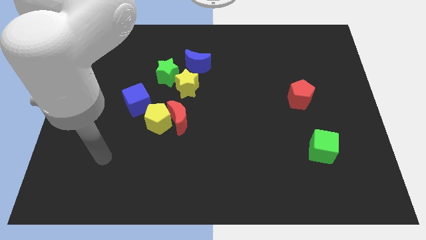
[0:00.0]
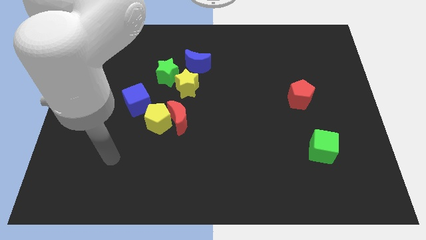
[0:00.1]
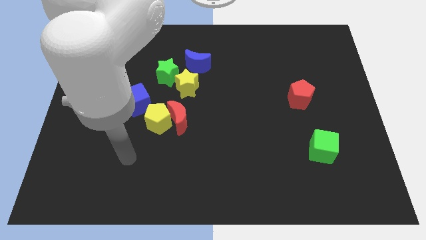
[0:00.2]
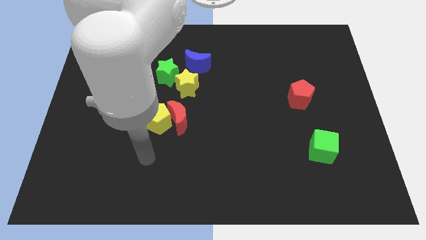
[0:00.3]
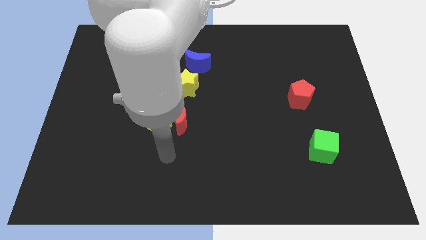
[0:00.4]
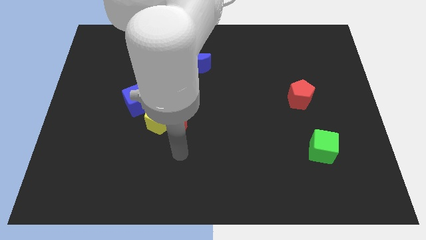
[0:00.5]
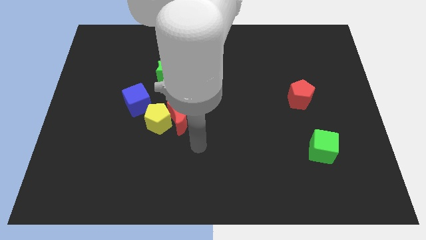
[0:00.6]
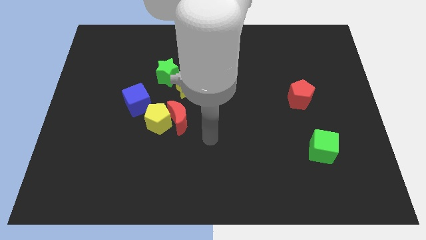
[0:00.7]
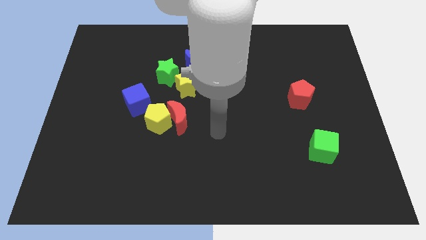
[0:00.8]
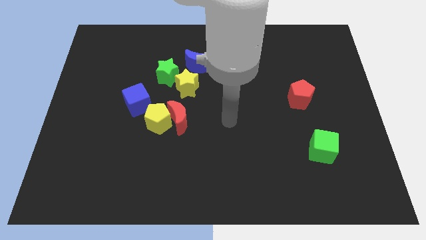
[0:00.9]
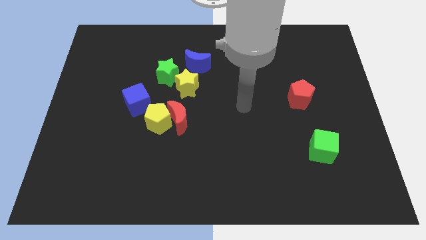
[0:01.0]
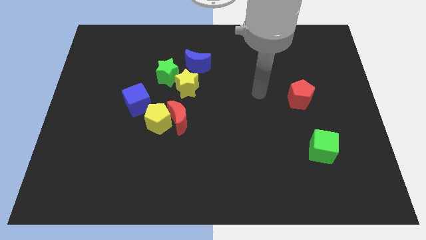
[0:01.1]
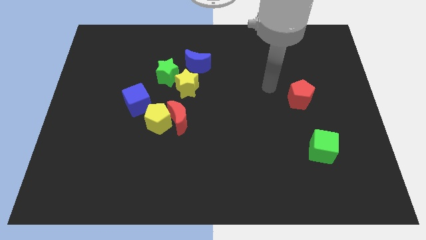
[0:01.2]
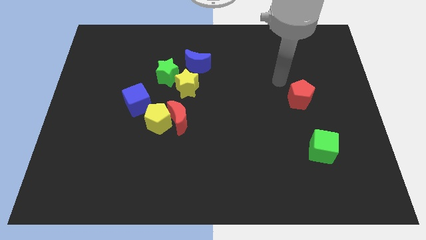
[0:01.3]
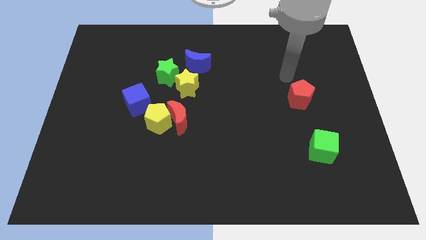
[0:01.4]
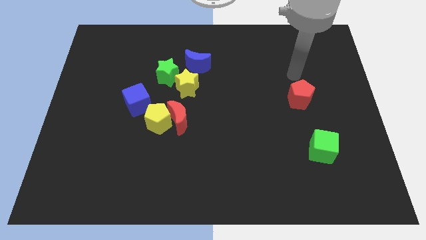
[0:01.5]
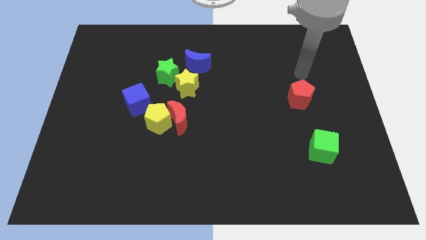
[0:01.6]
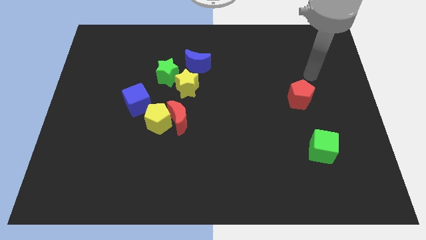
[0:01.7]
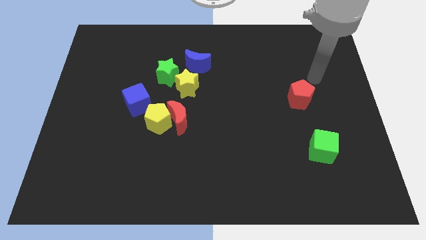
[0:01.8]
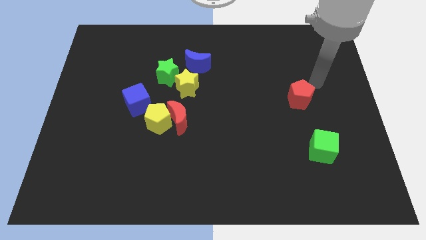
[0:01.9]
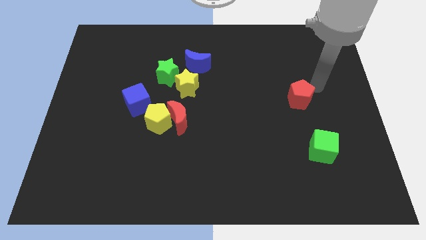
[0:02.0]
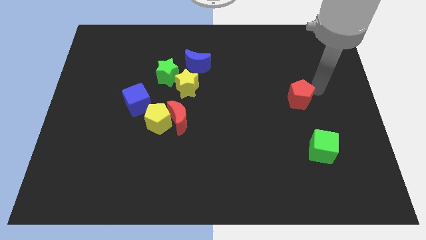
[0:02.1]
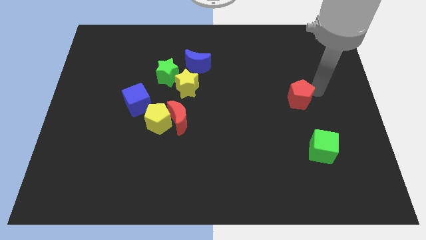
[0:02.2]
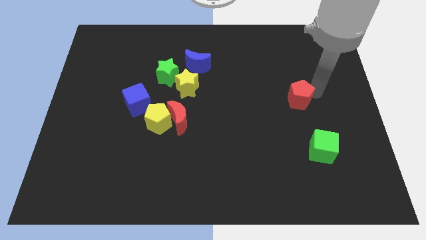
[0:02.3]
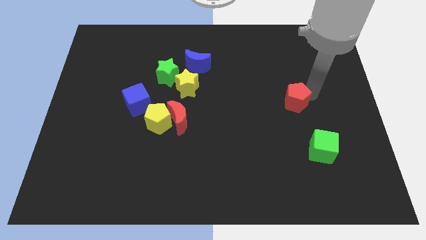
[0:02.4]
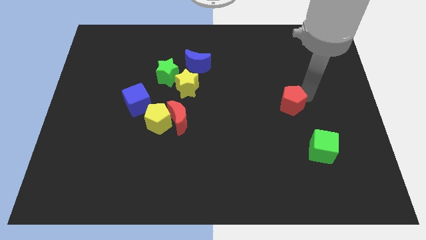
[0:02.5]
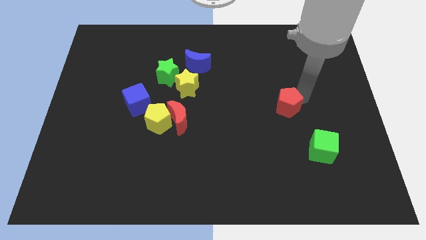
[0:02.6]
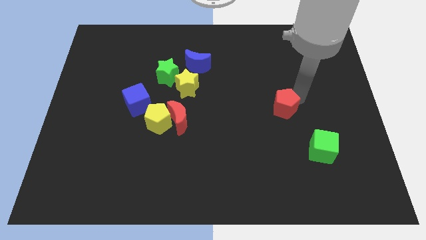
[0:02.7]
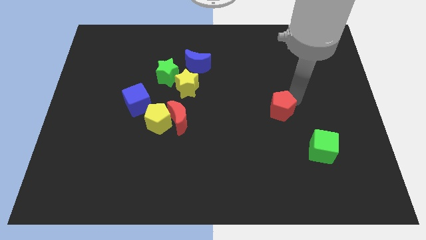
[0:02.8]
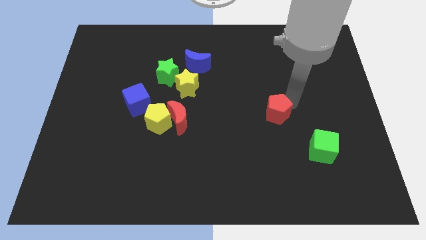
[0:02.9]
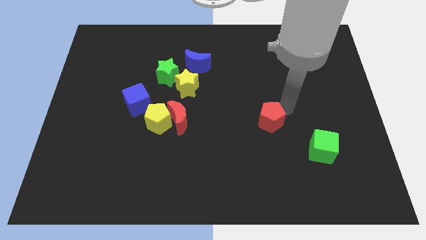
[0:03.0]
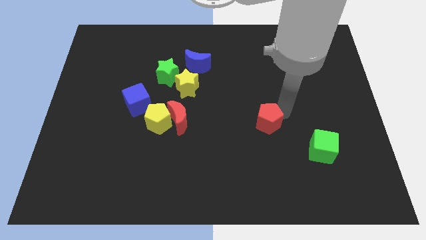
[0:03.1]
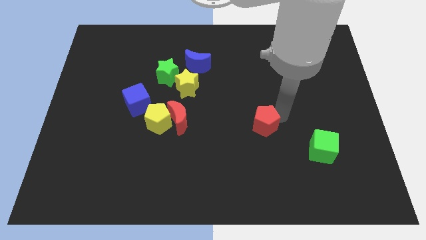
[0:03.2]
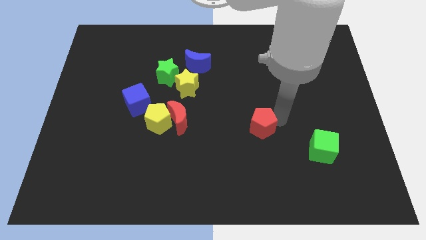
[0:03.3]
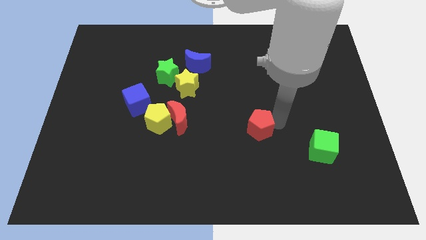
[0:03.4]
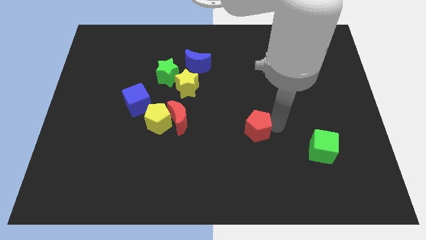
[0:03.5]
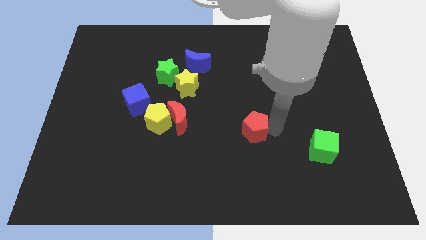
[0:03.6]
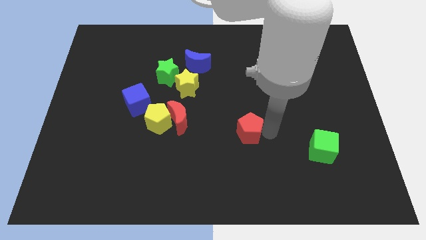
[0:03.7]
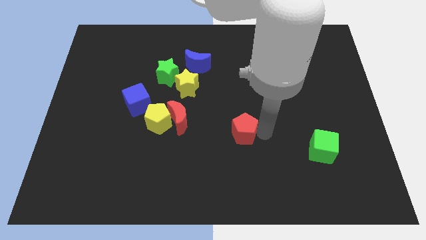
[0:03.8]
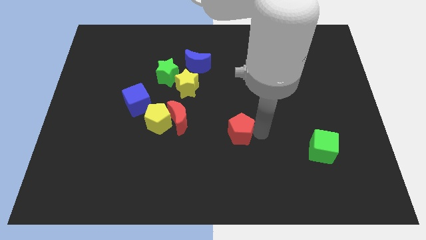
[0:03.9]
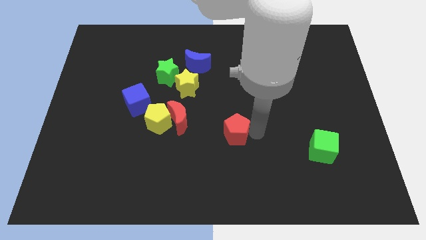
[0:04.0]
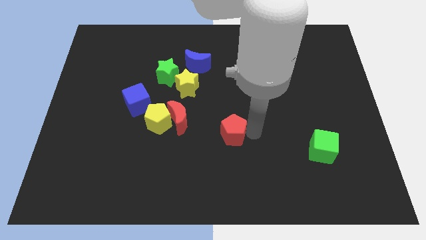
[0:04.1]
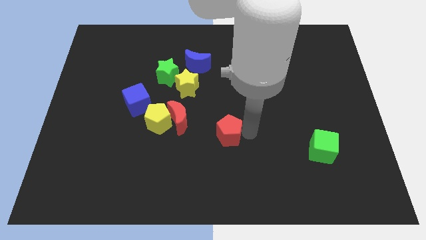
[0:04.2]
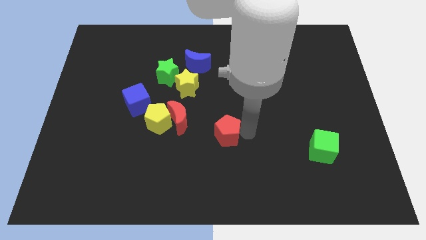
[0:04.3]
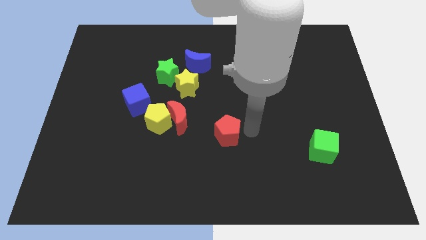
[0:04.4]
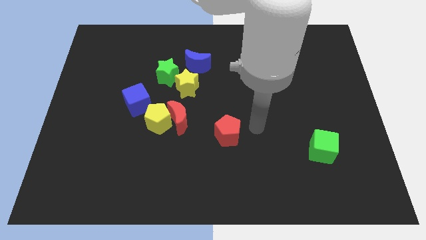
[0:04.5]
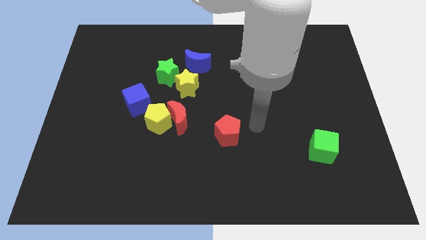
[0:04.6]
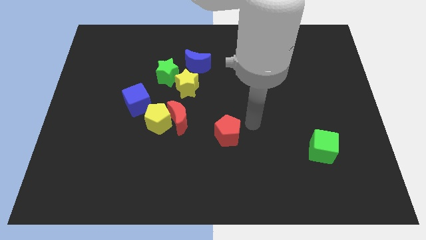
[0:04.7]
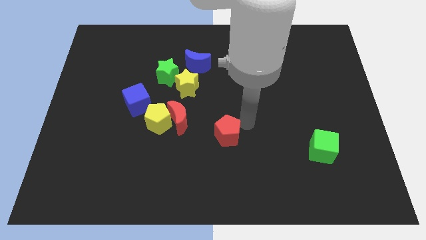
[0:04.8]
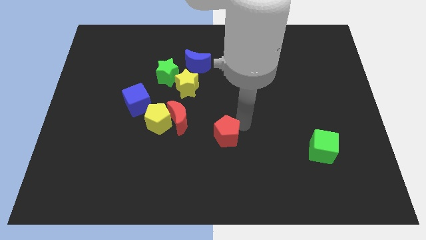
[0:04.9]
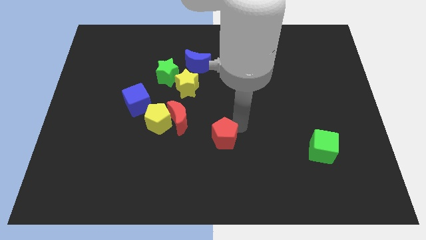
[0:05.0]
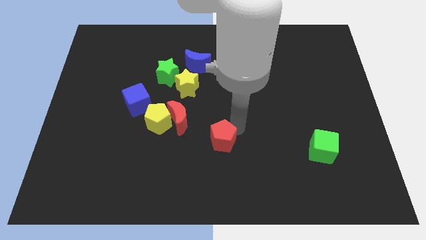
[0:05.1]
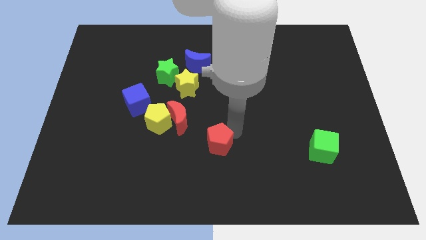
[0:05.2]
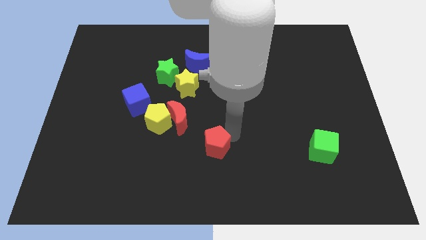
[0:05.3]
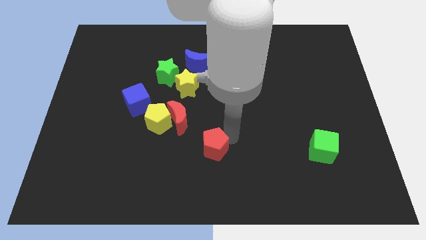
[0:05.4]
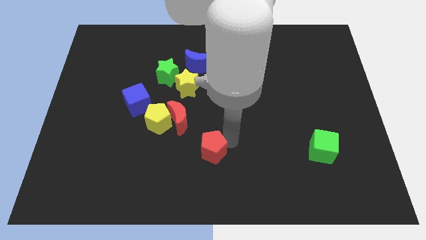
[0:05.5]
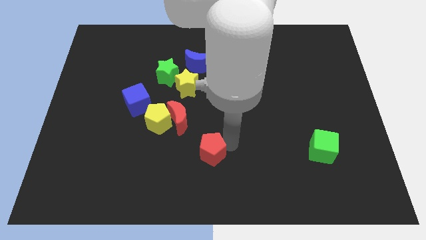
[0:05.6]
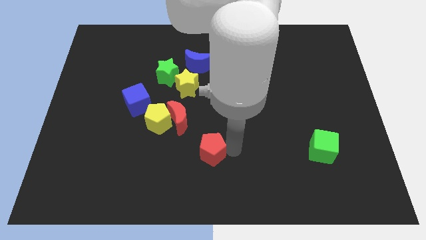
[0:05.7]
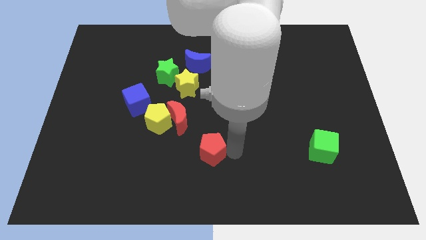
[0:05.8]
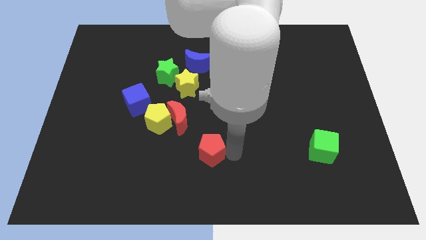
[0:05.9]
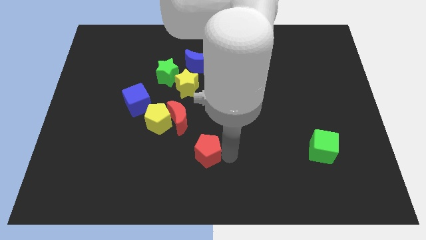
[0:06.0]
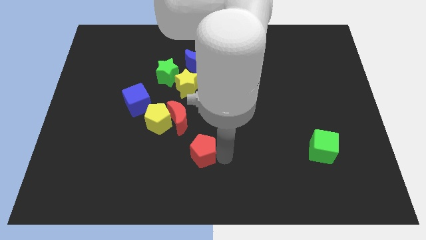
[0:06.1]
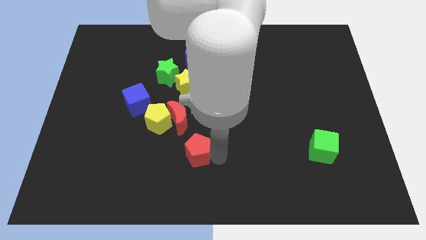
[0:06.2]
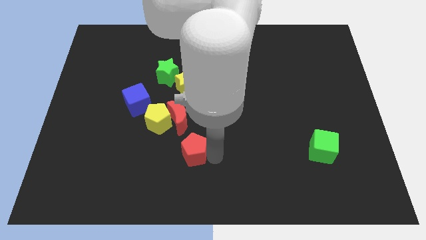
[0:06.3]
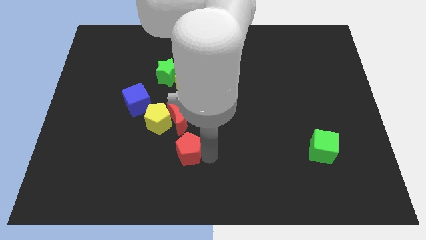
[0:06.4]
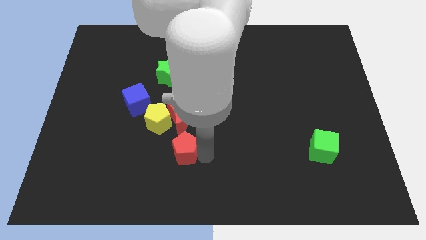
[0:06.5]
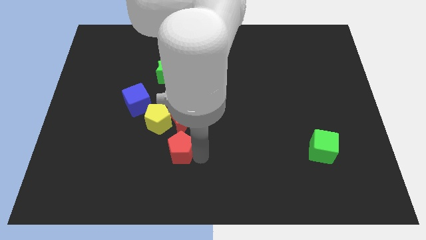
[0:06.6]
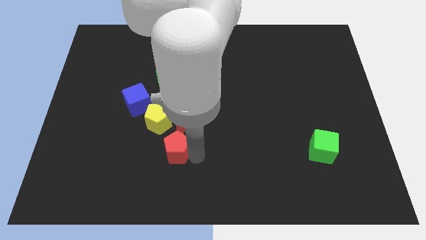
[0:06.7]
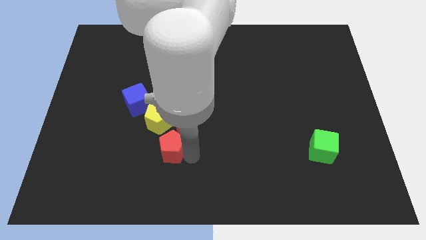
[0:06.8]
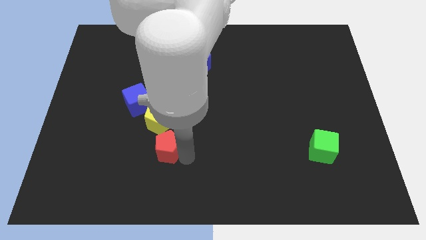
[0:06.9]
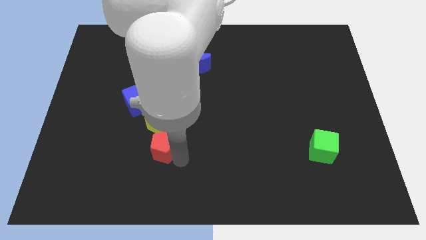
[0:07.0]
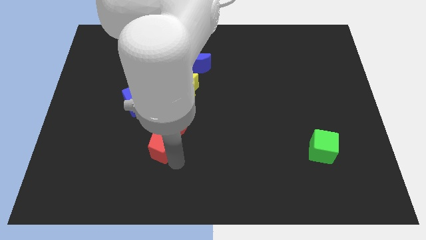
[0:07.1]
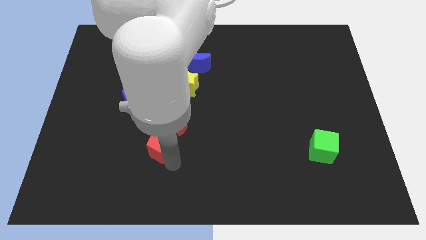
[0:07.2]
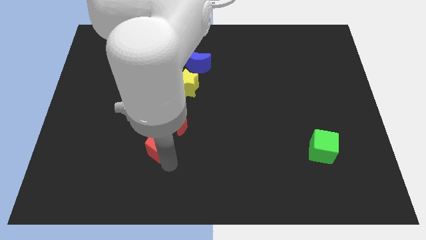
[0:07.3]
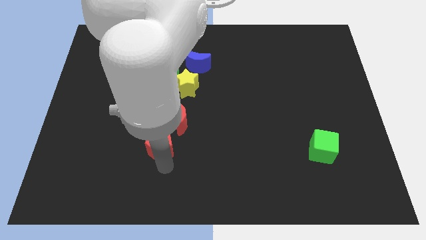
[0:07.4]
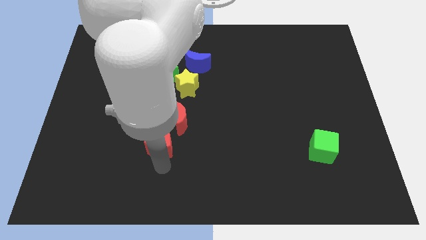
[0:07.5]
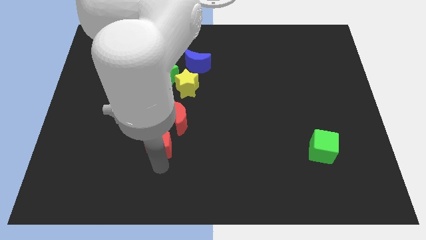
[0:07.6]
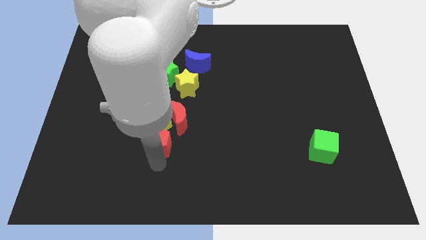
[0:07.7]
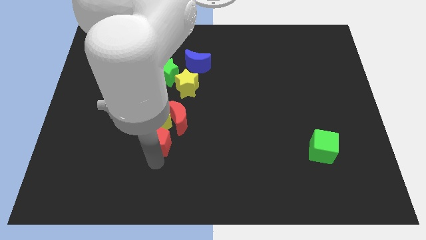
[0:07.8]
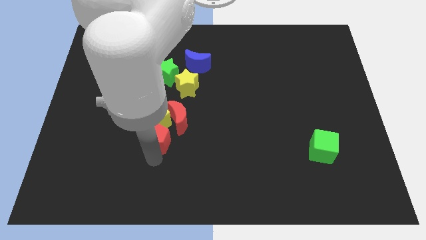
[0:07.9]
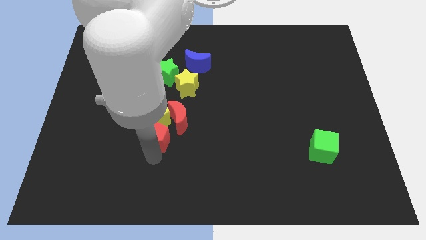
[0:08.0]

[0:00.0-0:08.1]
slide the red pentagon towards the yellow pentagon

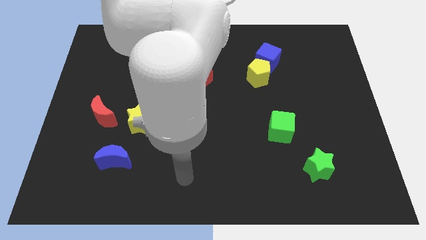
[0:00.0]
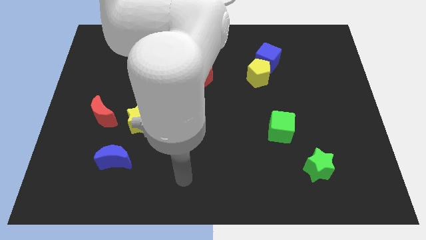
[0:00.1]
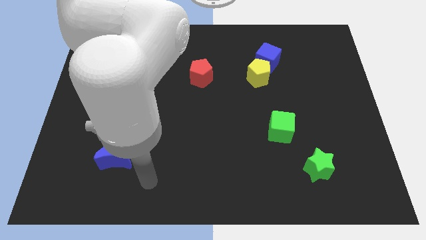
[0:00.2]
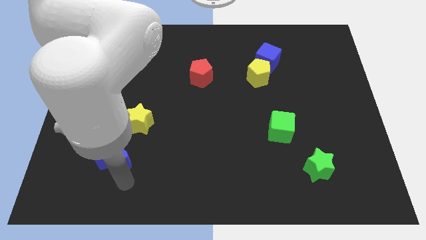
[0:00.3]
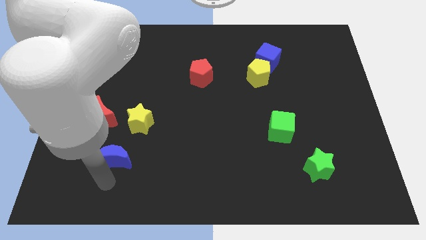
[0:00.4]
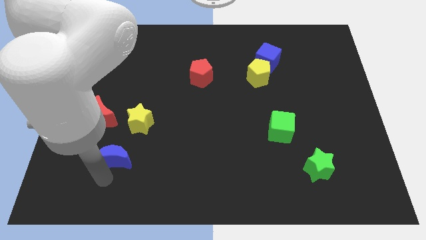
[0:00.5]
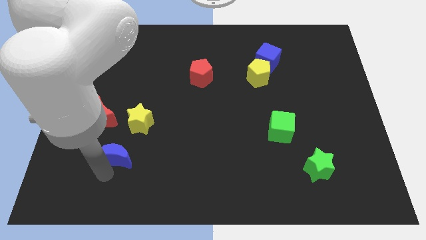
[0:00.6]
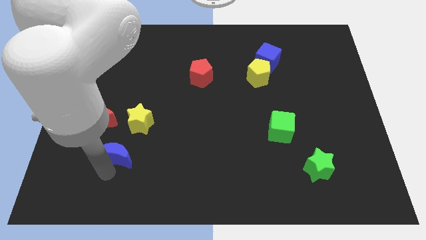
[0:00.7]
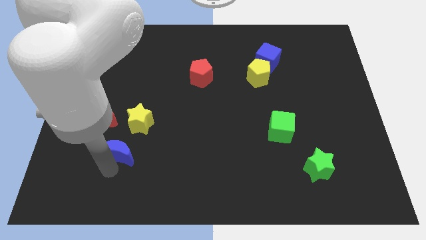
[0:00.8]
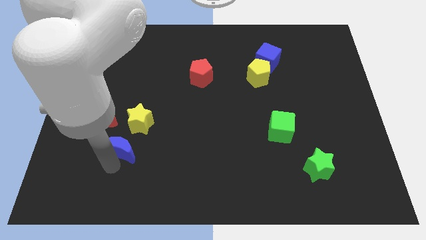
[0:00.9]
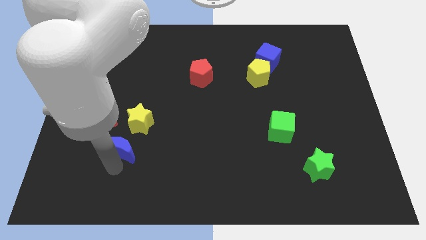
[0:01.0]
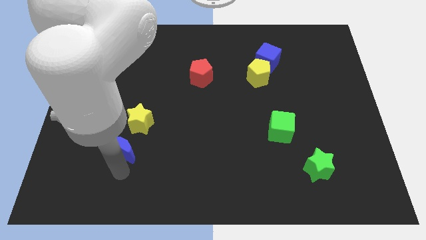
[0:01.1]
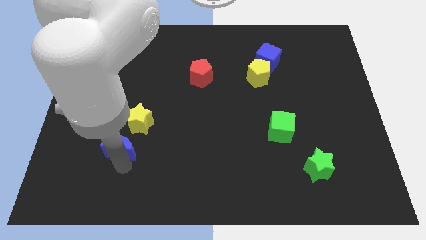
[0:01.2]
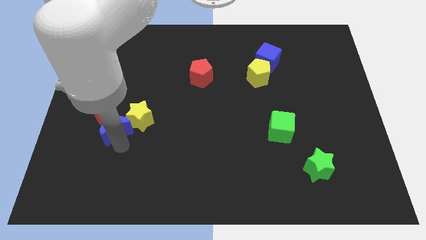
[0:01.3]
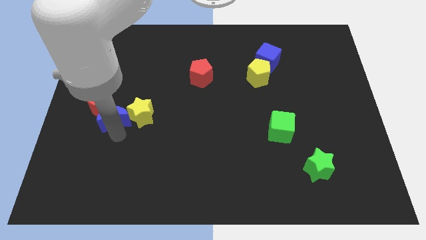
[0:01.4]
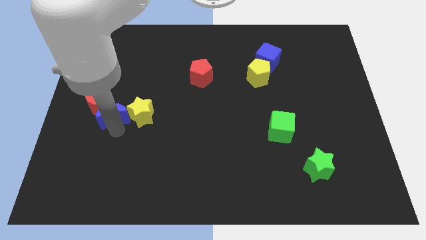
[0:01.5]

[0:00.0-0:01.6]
slide the blue moon towards the red moon
